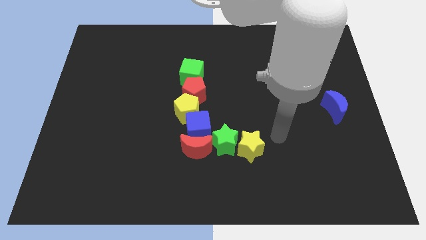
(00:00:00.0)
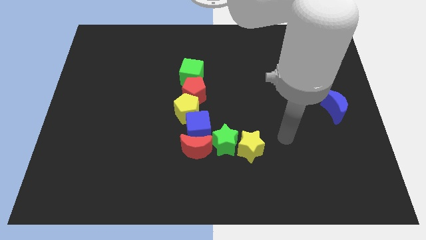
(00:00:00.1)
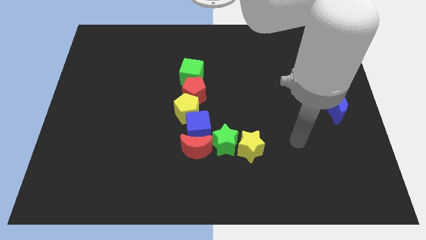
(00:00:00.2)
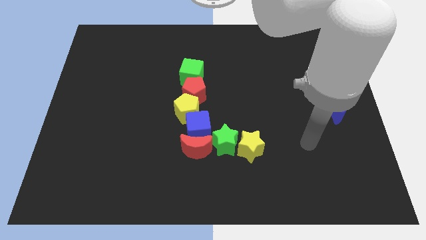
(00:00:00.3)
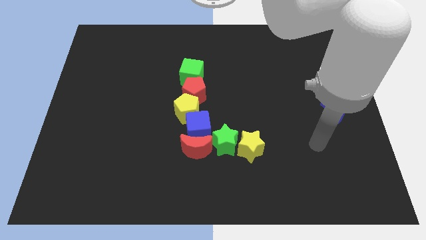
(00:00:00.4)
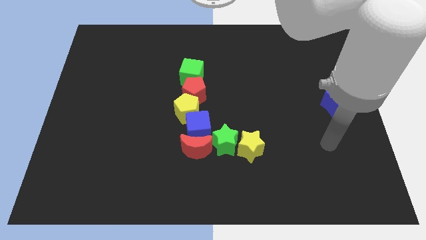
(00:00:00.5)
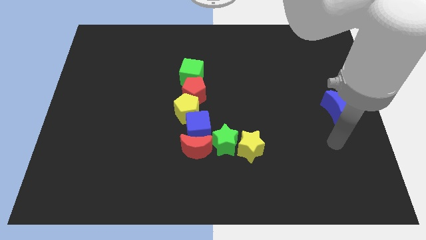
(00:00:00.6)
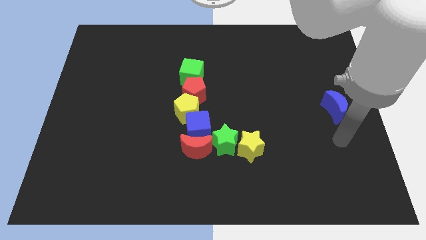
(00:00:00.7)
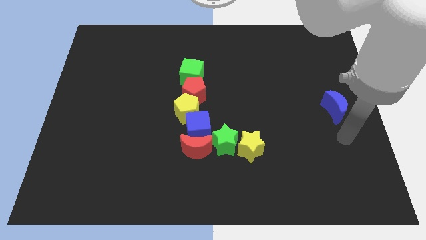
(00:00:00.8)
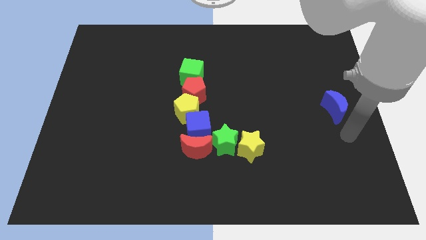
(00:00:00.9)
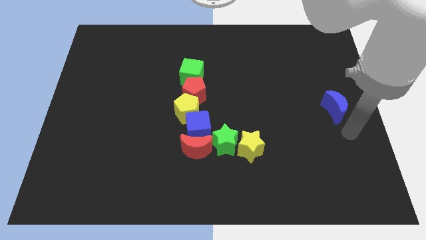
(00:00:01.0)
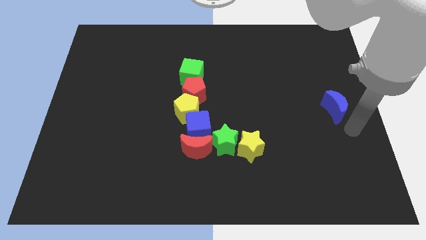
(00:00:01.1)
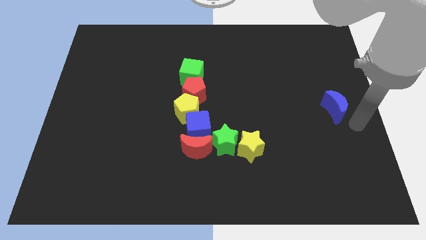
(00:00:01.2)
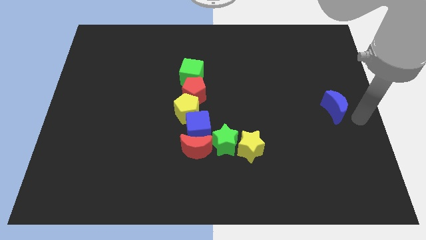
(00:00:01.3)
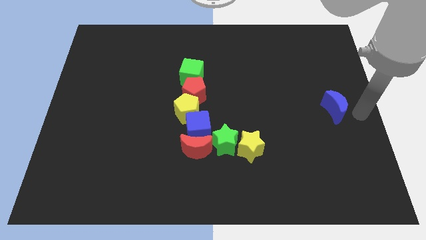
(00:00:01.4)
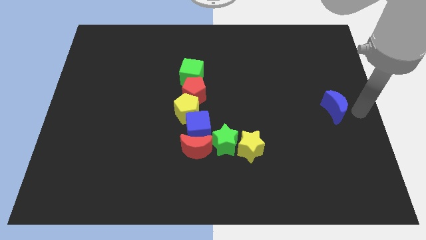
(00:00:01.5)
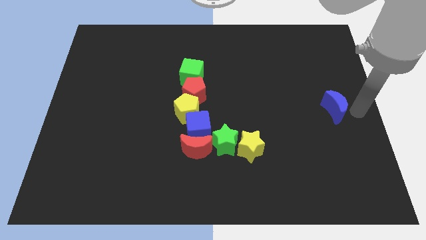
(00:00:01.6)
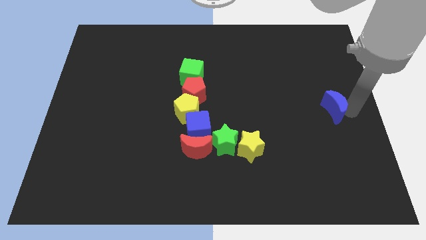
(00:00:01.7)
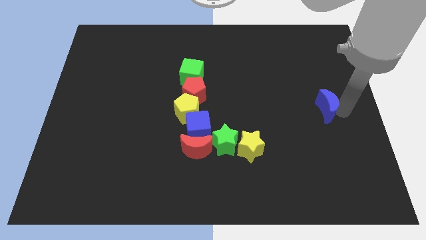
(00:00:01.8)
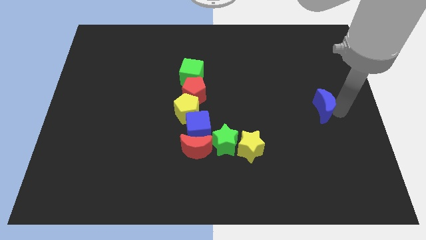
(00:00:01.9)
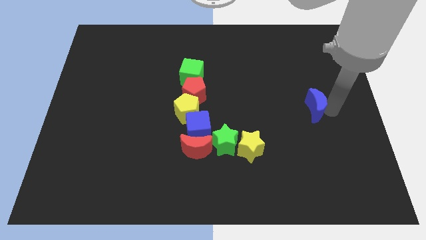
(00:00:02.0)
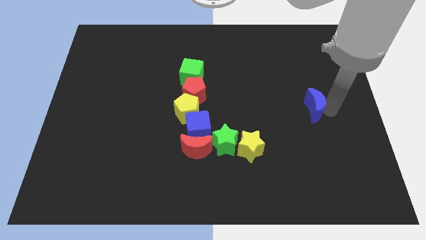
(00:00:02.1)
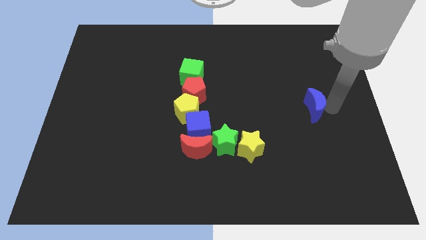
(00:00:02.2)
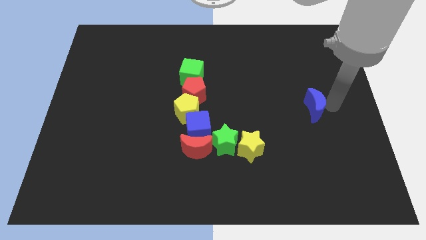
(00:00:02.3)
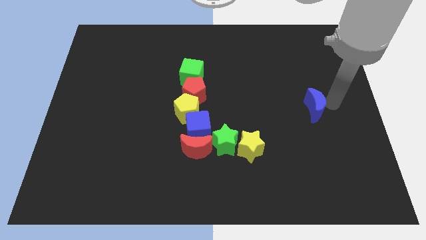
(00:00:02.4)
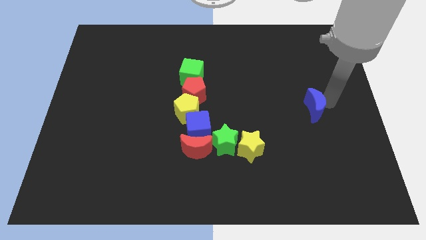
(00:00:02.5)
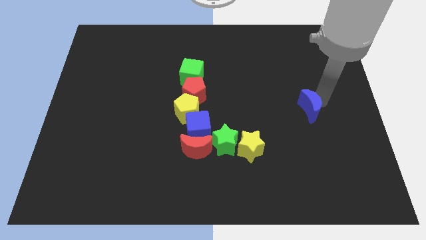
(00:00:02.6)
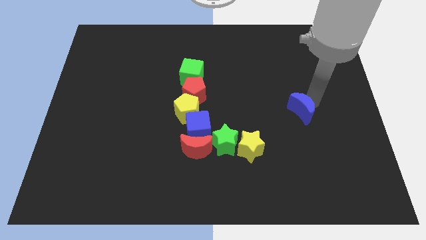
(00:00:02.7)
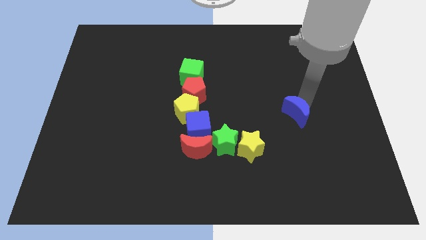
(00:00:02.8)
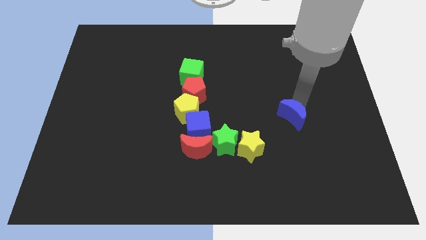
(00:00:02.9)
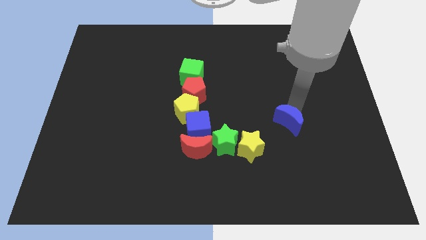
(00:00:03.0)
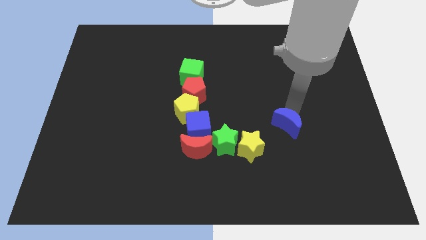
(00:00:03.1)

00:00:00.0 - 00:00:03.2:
place the blue moon horizontally to the blue cube

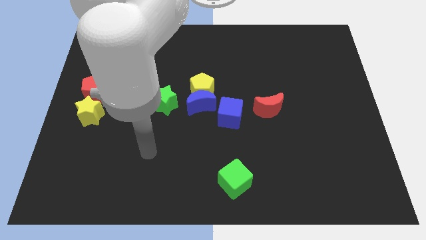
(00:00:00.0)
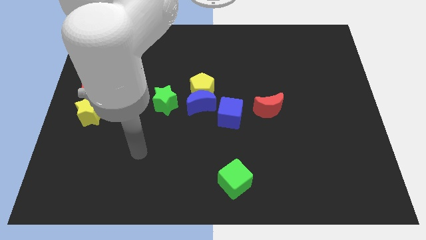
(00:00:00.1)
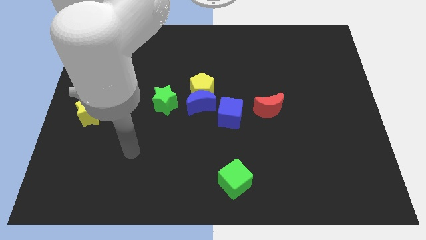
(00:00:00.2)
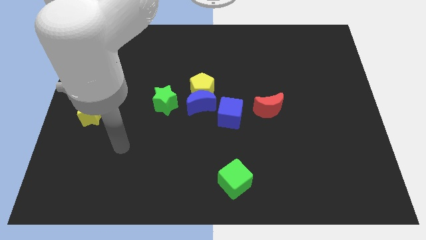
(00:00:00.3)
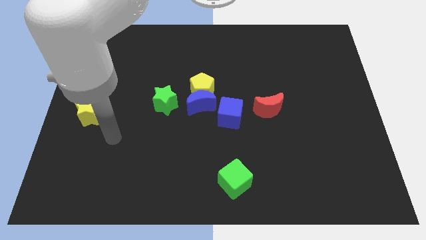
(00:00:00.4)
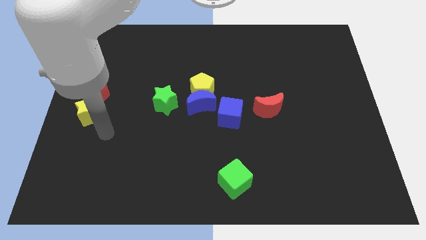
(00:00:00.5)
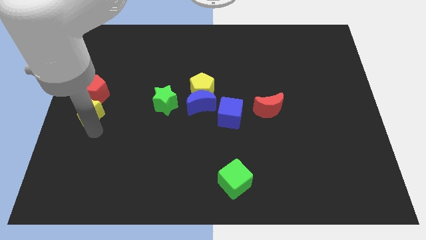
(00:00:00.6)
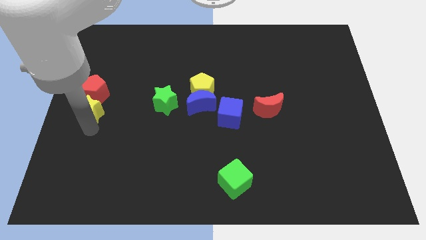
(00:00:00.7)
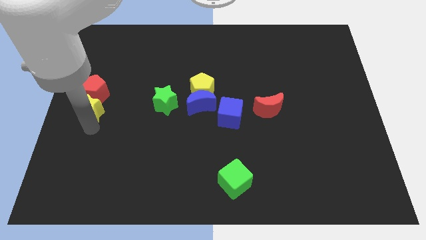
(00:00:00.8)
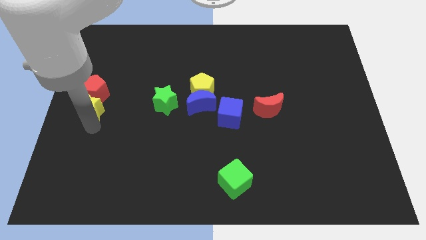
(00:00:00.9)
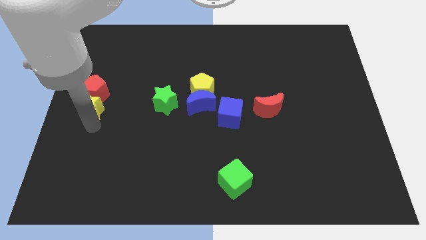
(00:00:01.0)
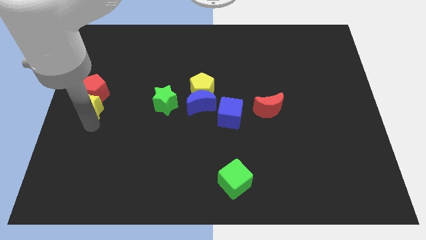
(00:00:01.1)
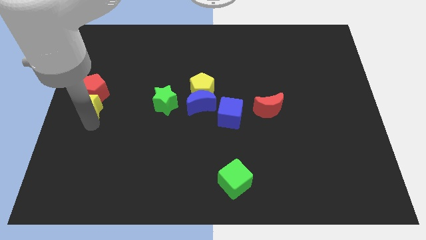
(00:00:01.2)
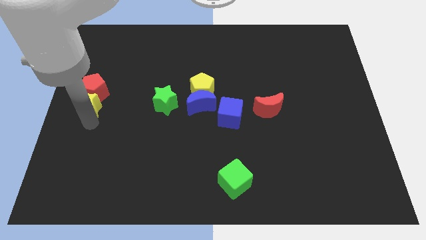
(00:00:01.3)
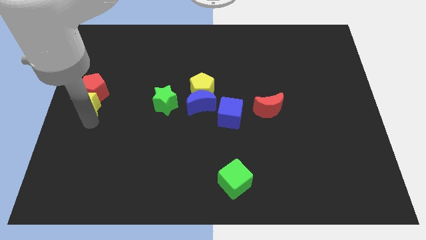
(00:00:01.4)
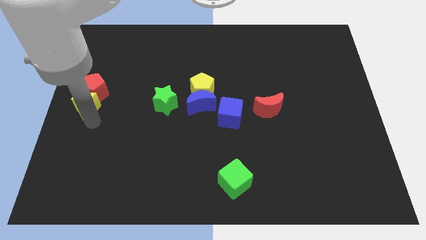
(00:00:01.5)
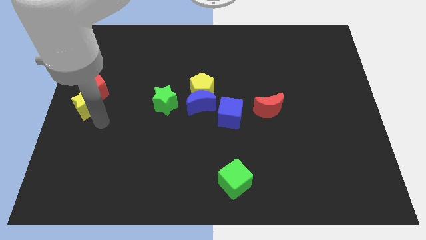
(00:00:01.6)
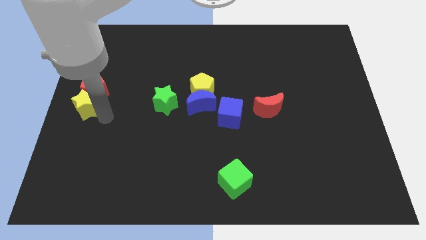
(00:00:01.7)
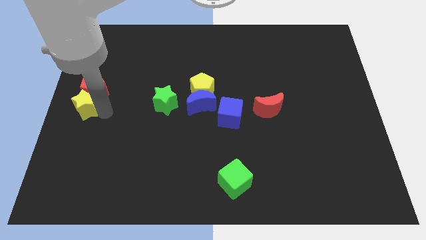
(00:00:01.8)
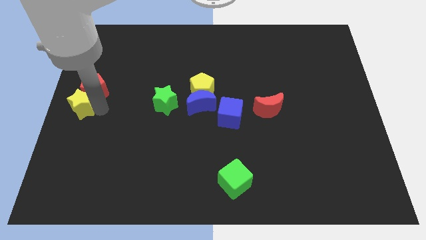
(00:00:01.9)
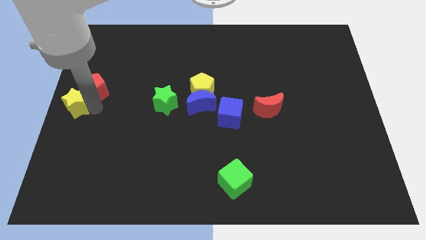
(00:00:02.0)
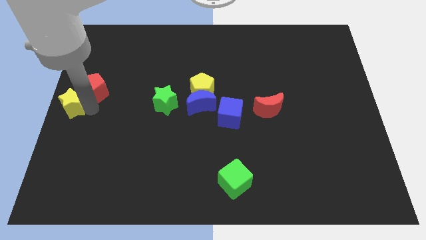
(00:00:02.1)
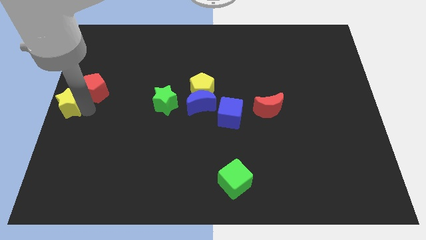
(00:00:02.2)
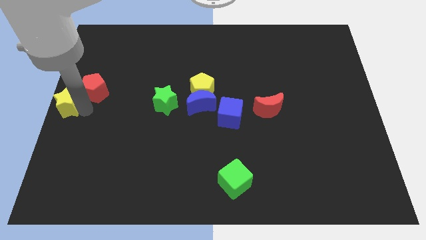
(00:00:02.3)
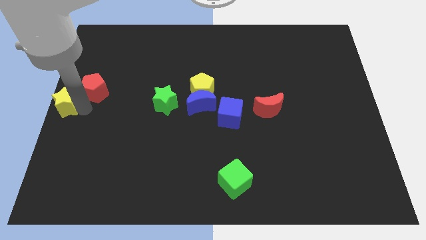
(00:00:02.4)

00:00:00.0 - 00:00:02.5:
push the yellow star to the center left of the board

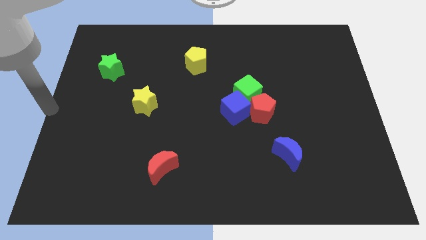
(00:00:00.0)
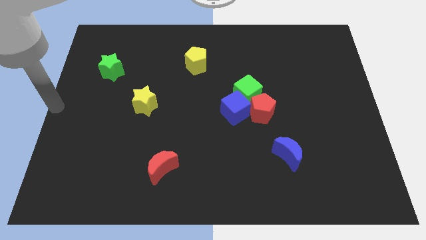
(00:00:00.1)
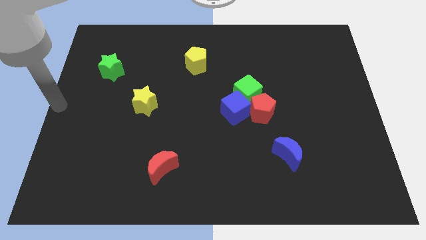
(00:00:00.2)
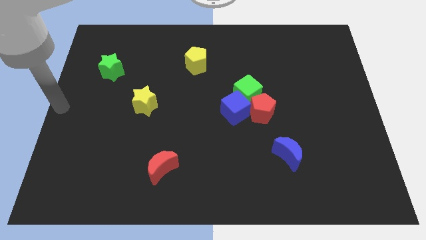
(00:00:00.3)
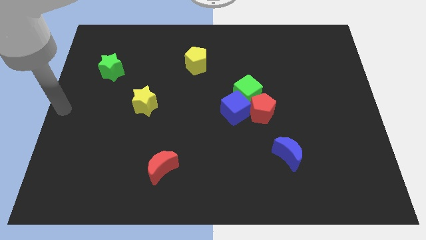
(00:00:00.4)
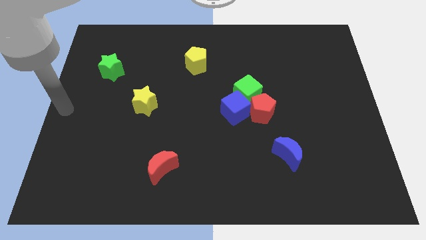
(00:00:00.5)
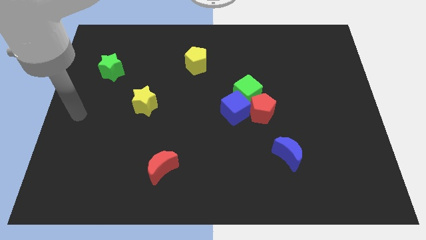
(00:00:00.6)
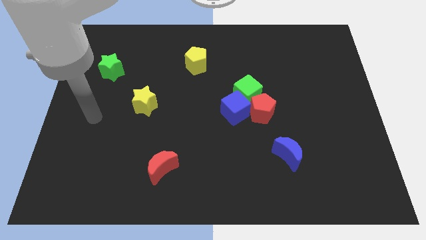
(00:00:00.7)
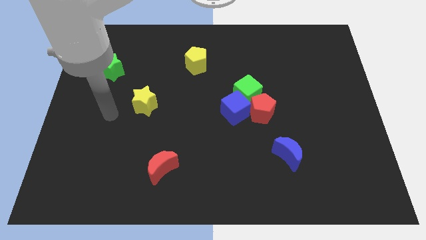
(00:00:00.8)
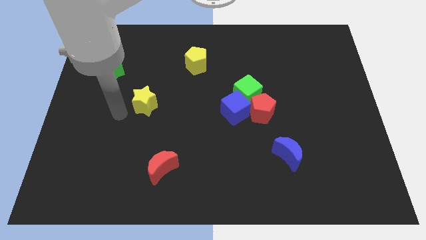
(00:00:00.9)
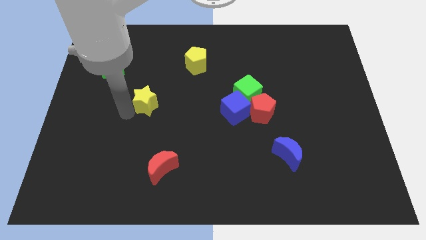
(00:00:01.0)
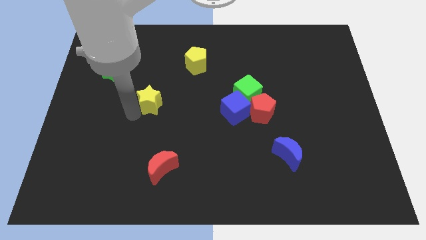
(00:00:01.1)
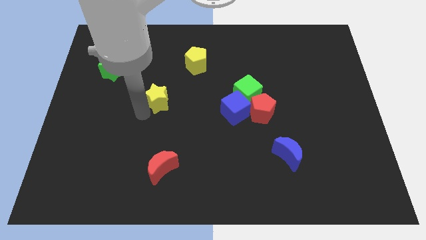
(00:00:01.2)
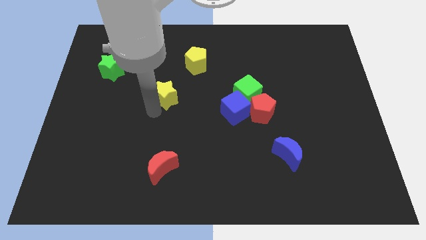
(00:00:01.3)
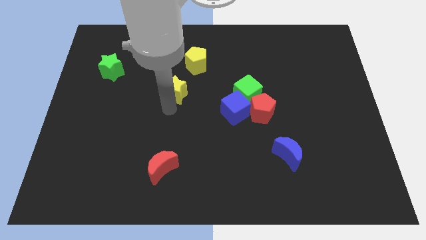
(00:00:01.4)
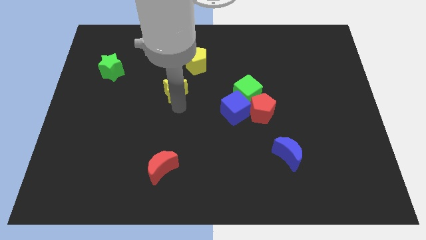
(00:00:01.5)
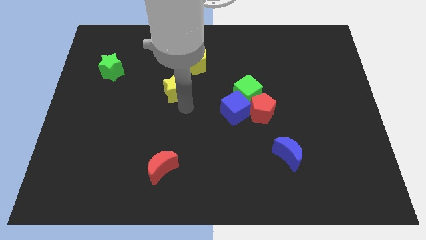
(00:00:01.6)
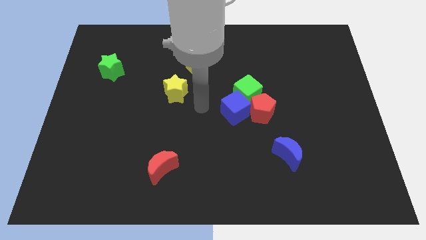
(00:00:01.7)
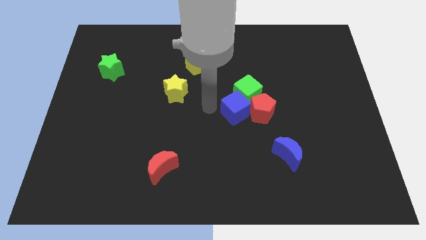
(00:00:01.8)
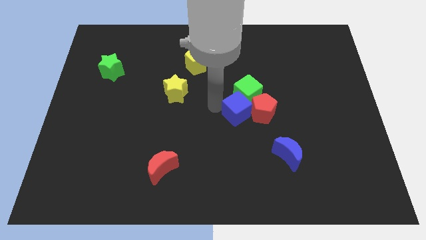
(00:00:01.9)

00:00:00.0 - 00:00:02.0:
push the yellow star towards yellow pentagon

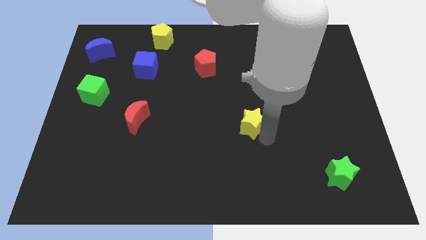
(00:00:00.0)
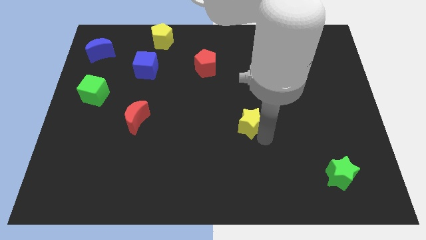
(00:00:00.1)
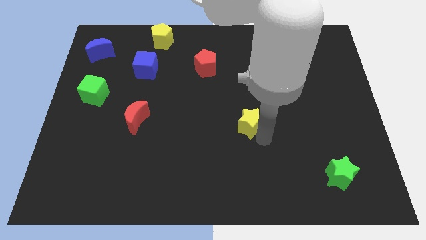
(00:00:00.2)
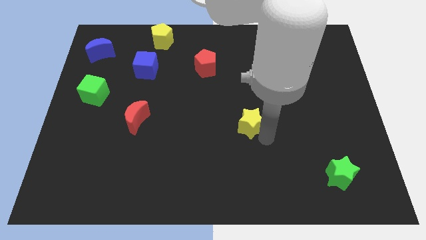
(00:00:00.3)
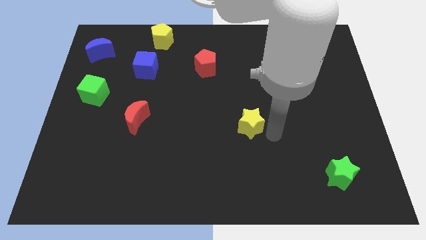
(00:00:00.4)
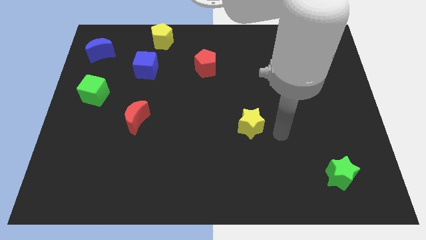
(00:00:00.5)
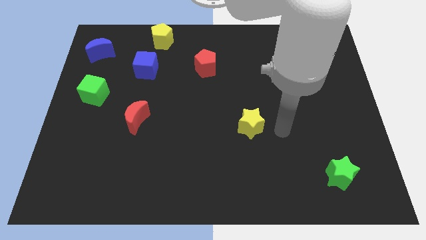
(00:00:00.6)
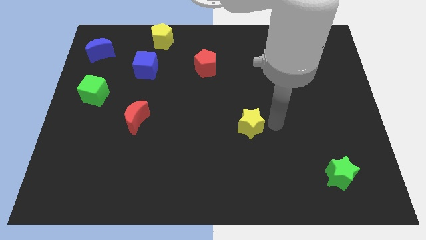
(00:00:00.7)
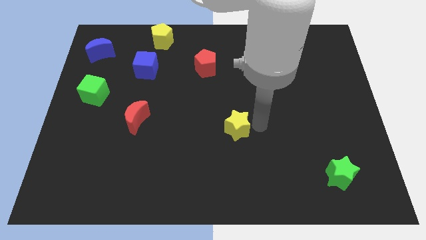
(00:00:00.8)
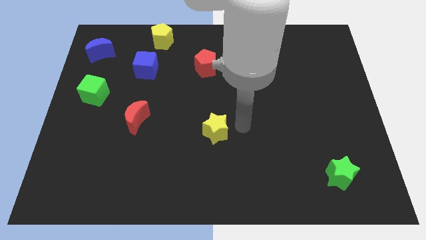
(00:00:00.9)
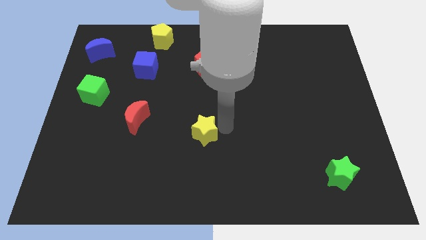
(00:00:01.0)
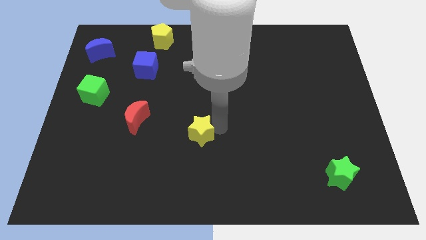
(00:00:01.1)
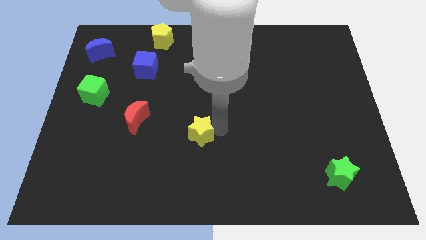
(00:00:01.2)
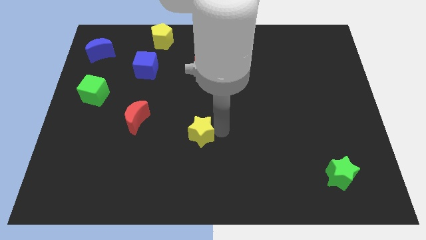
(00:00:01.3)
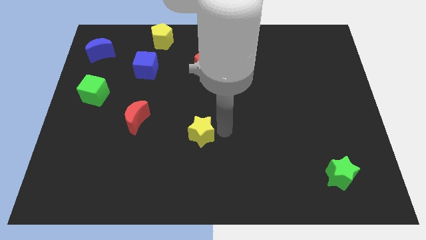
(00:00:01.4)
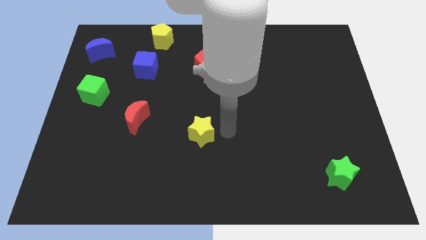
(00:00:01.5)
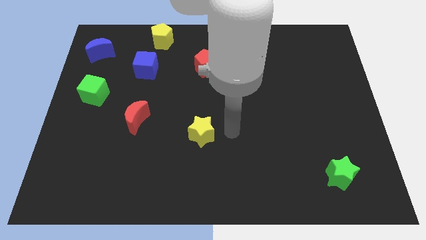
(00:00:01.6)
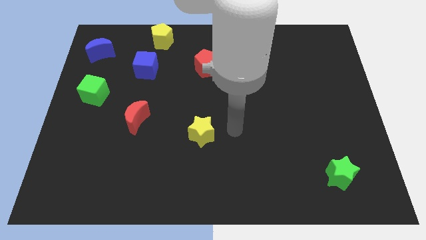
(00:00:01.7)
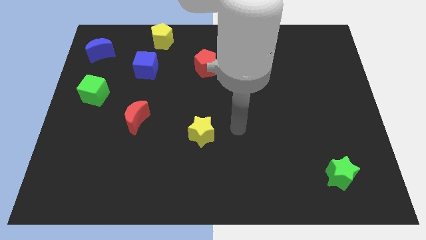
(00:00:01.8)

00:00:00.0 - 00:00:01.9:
push the yellow star to the center of the board
